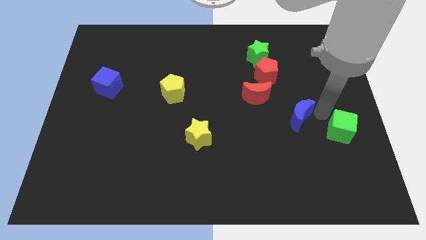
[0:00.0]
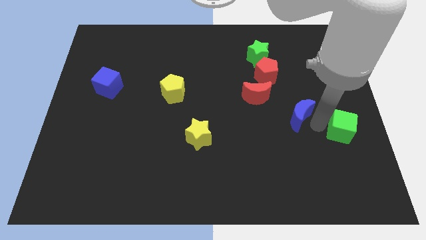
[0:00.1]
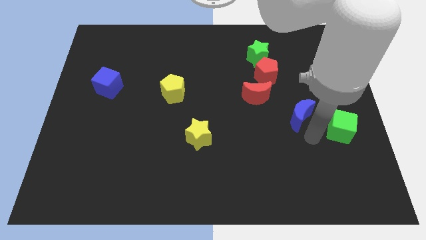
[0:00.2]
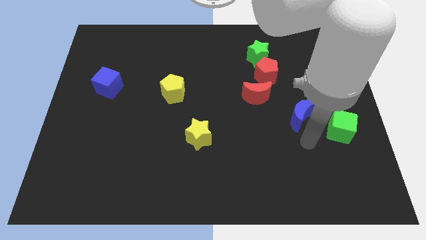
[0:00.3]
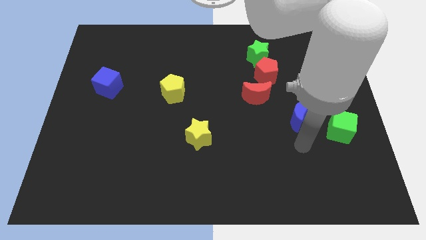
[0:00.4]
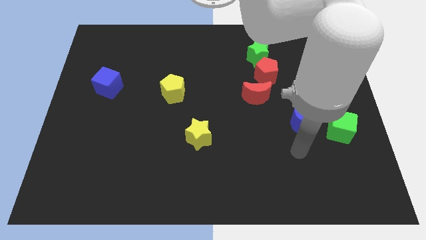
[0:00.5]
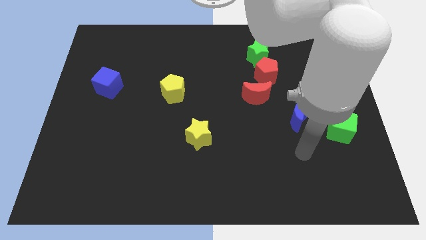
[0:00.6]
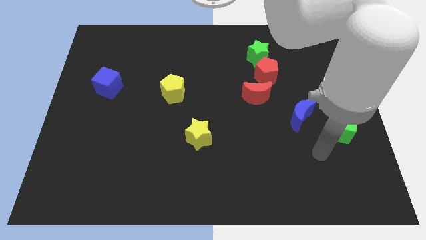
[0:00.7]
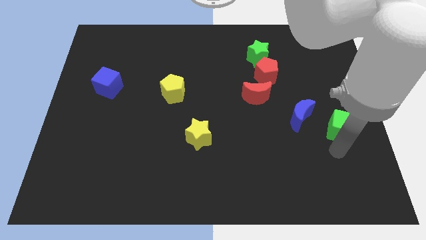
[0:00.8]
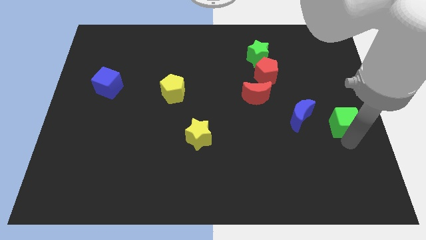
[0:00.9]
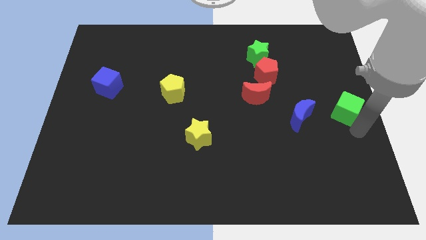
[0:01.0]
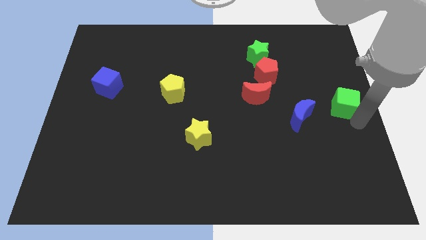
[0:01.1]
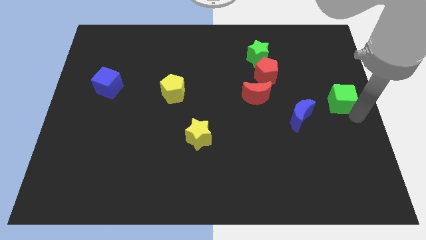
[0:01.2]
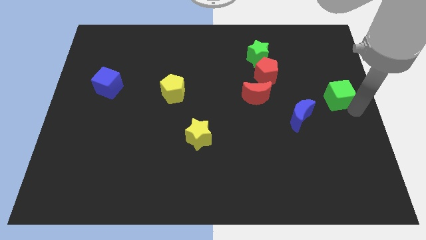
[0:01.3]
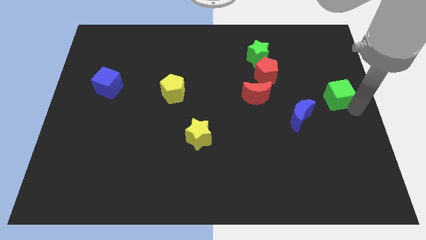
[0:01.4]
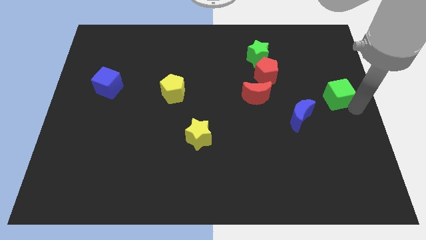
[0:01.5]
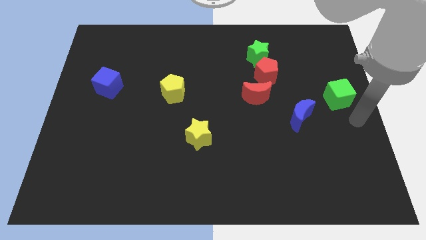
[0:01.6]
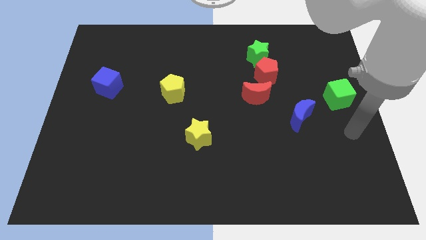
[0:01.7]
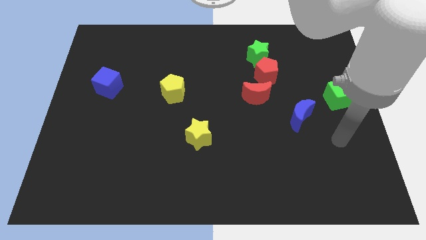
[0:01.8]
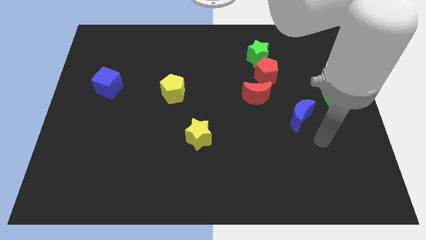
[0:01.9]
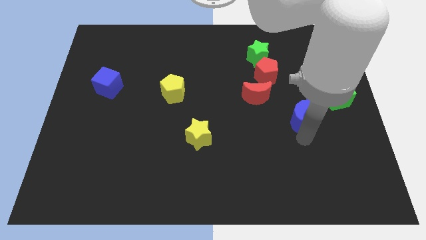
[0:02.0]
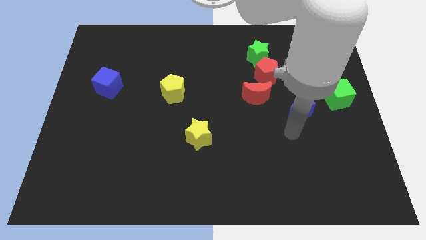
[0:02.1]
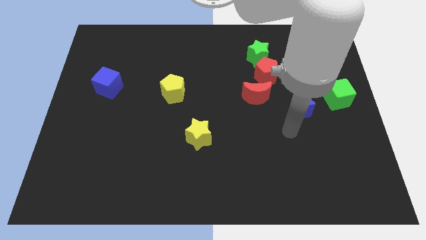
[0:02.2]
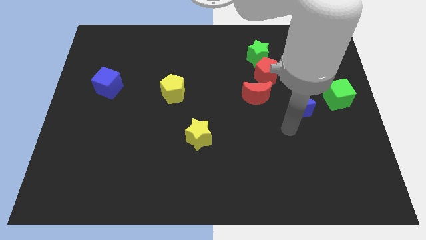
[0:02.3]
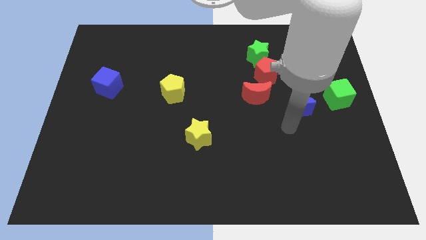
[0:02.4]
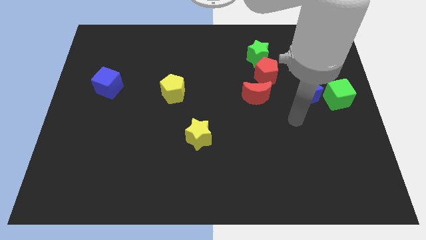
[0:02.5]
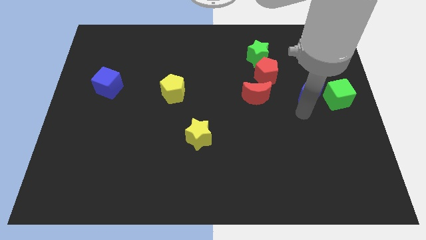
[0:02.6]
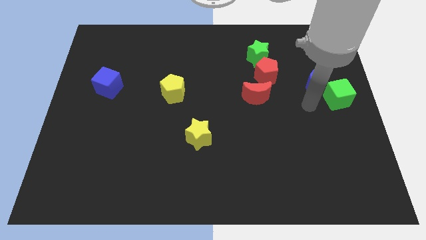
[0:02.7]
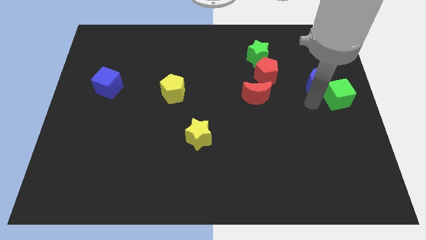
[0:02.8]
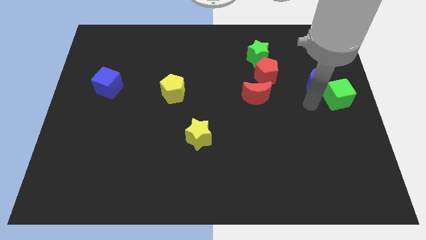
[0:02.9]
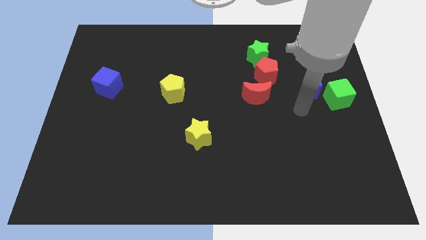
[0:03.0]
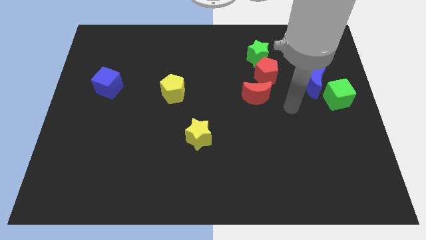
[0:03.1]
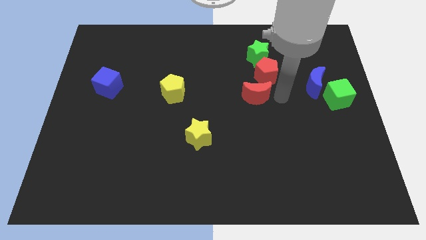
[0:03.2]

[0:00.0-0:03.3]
place the green and blue block at the center right of the board

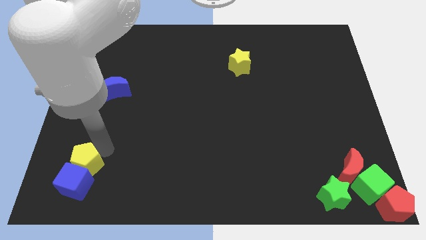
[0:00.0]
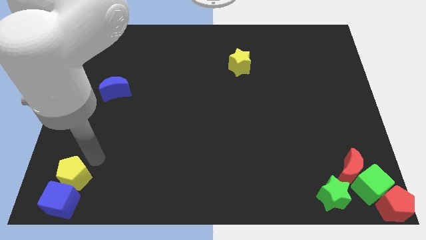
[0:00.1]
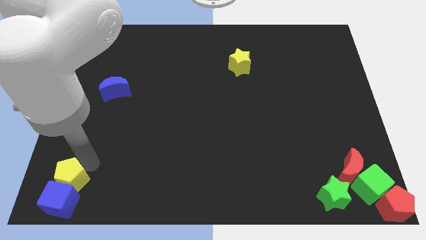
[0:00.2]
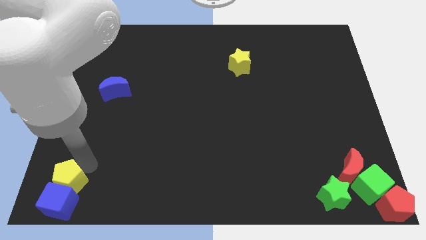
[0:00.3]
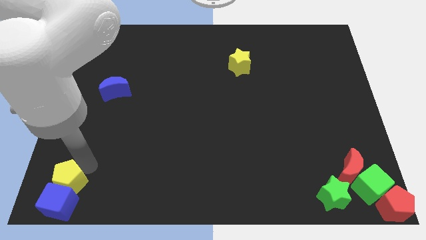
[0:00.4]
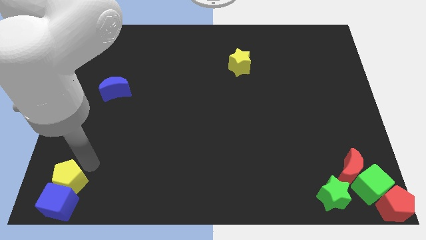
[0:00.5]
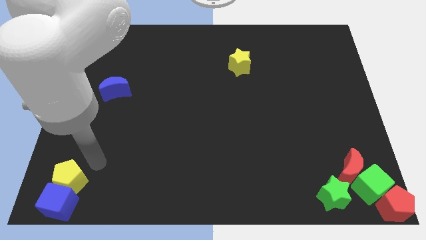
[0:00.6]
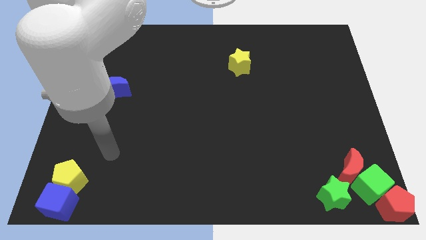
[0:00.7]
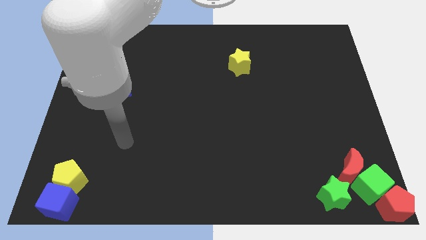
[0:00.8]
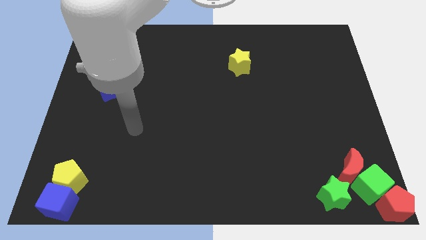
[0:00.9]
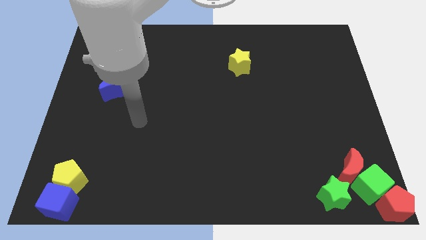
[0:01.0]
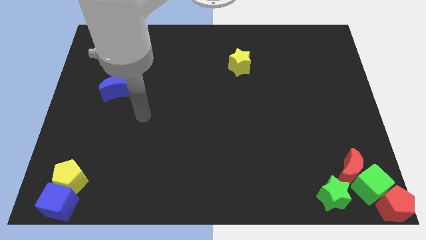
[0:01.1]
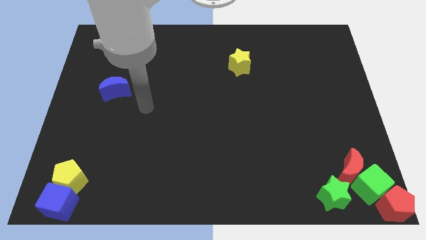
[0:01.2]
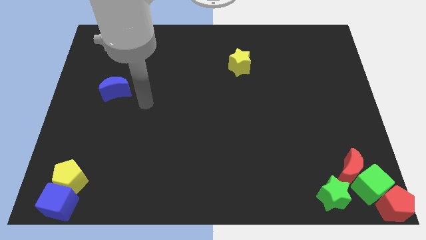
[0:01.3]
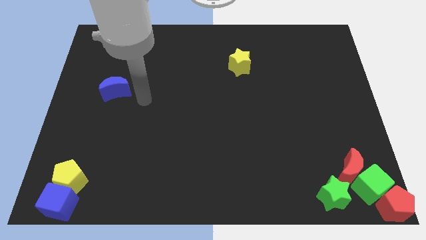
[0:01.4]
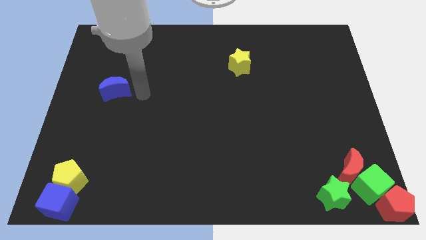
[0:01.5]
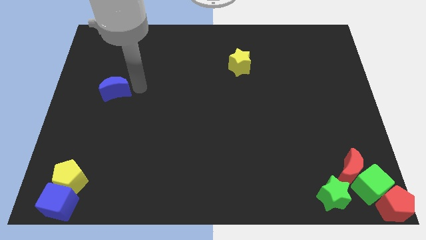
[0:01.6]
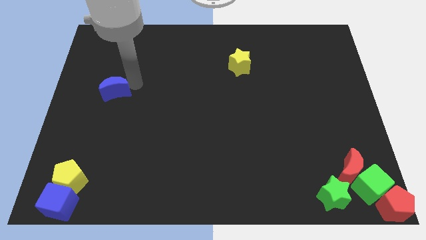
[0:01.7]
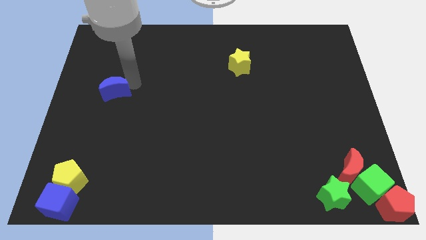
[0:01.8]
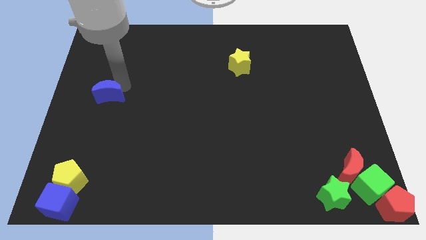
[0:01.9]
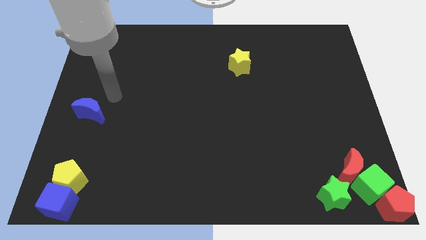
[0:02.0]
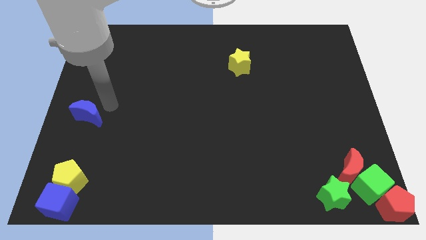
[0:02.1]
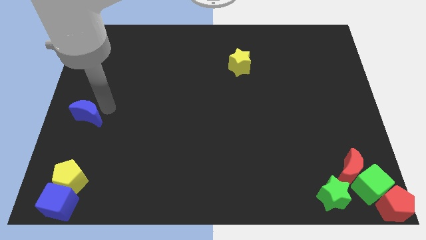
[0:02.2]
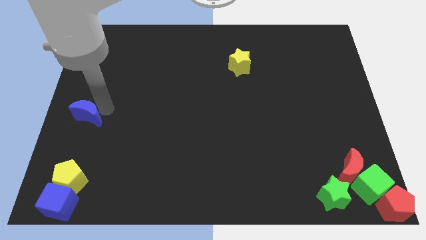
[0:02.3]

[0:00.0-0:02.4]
move your arm to the top of blue moon

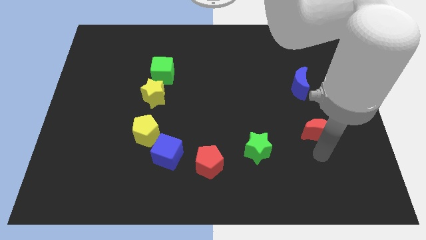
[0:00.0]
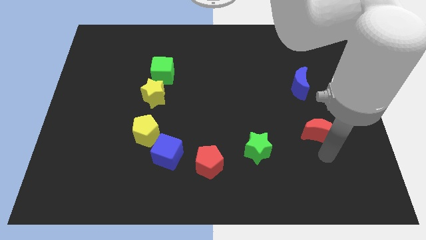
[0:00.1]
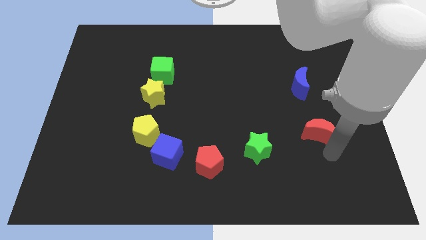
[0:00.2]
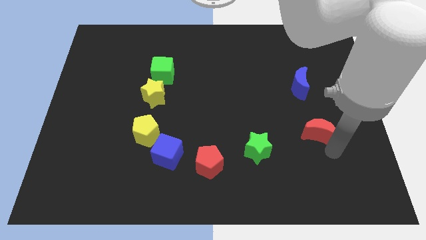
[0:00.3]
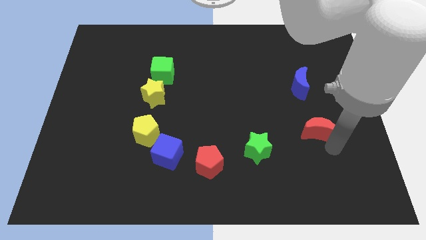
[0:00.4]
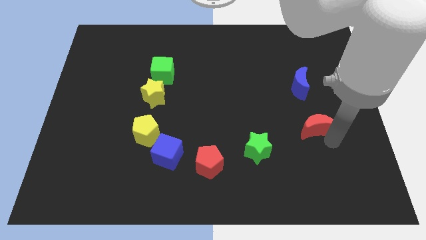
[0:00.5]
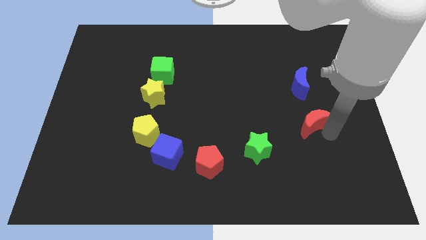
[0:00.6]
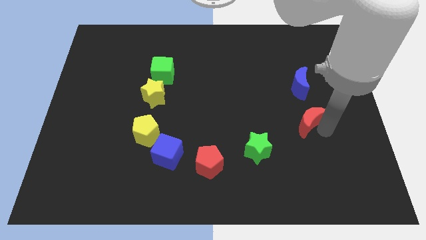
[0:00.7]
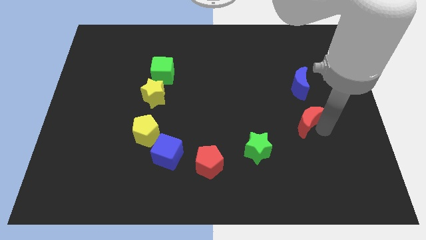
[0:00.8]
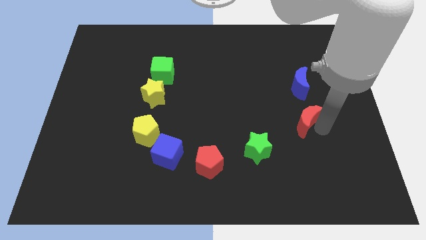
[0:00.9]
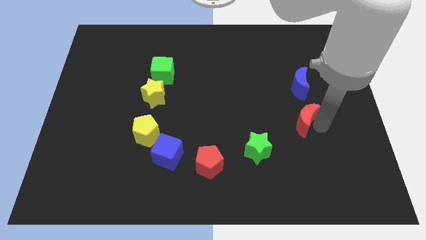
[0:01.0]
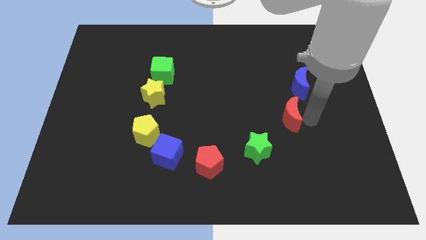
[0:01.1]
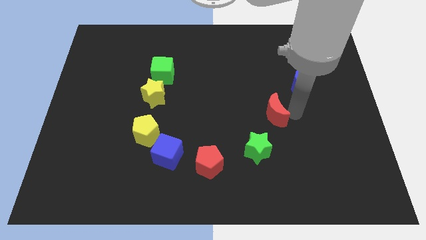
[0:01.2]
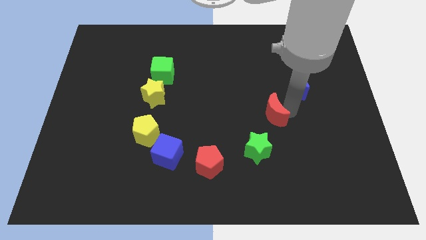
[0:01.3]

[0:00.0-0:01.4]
push the red crescent in between green star and blue crescent

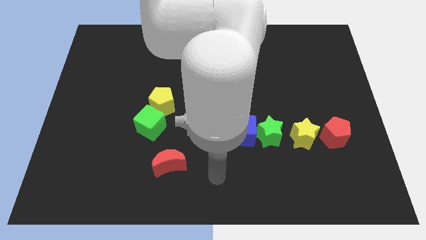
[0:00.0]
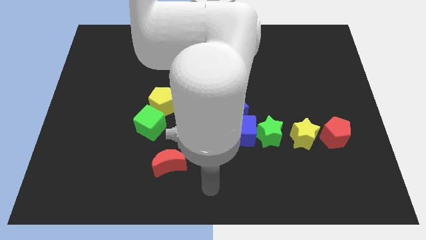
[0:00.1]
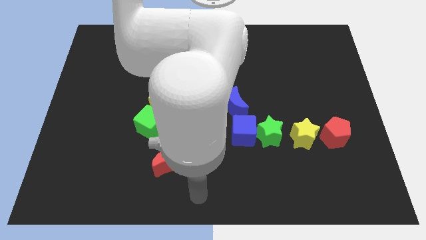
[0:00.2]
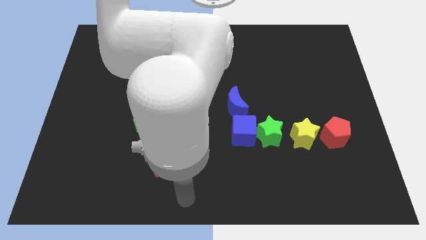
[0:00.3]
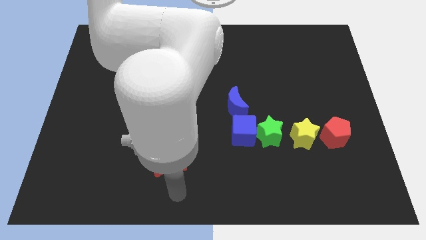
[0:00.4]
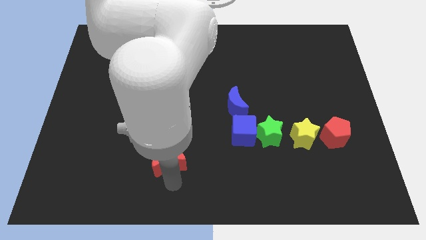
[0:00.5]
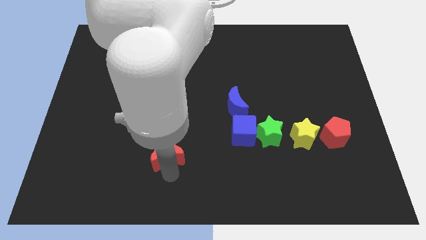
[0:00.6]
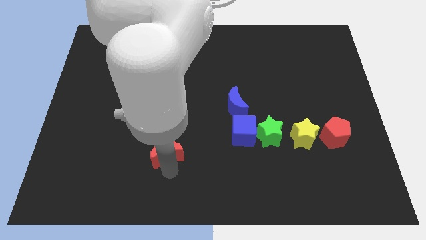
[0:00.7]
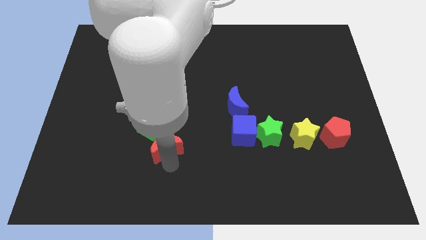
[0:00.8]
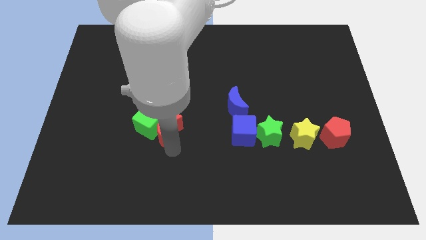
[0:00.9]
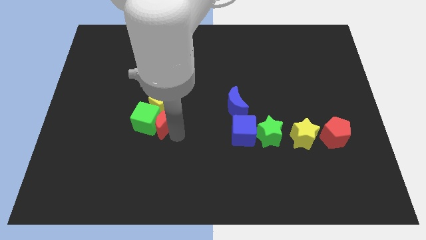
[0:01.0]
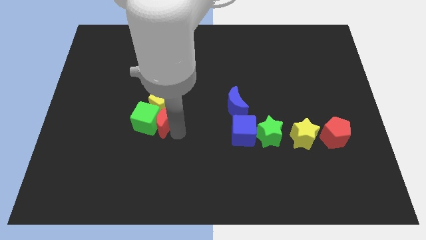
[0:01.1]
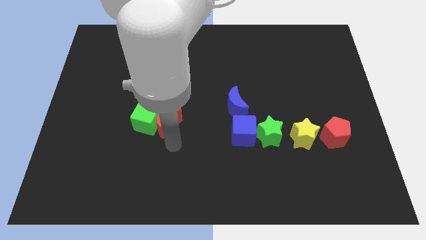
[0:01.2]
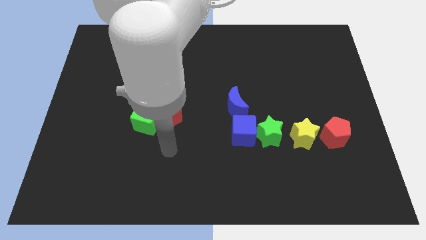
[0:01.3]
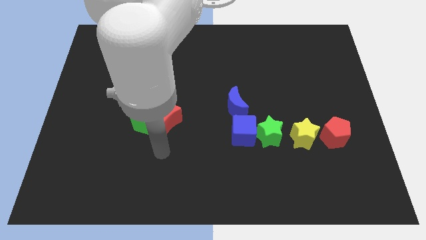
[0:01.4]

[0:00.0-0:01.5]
push red moon into the right of green cube

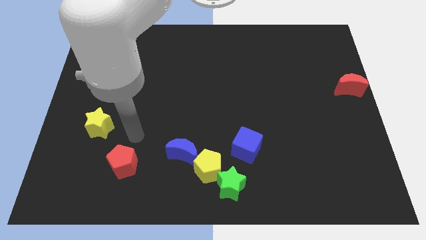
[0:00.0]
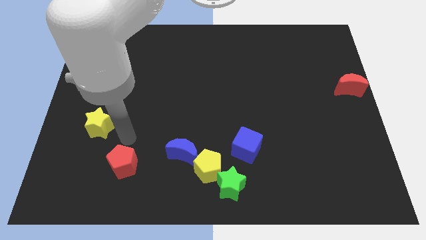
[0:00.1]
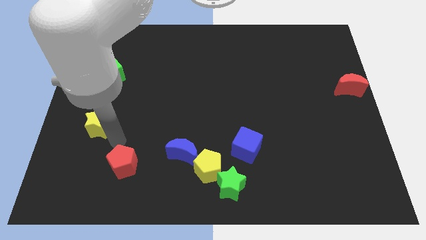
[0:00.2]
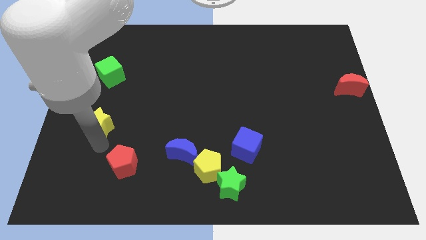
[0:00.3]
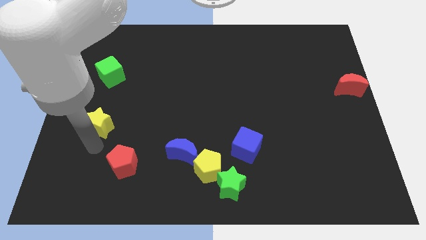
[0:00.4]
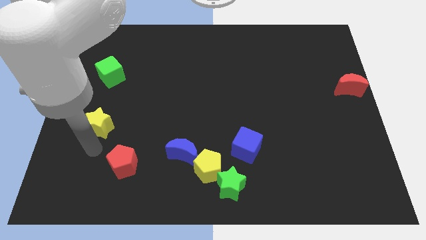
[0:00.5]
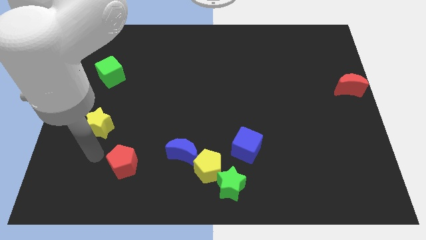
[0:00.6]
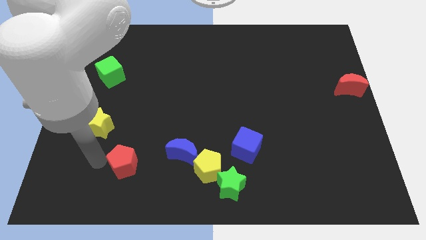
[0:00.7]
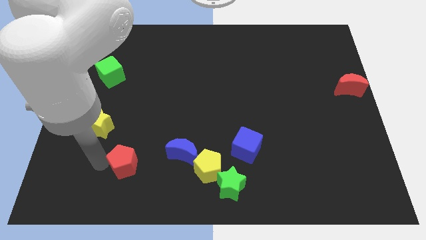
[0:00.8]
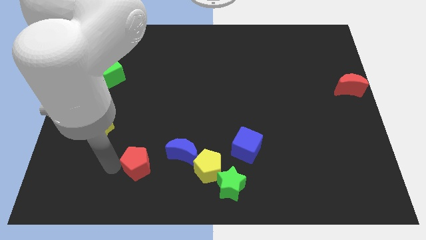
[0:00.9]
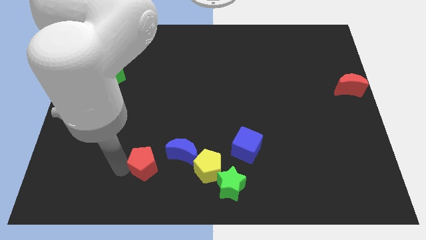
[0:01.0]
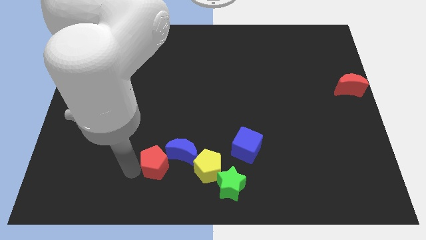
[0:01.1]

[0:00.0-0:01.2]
push the red pentagon into the blue moon
